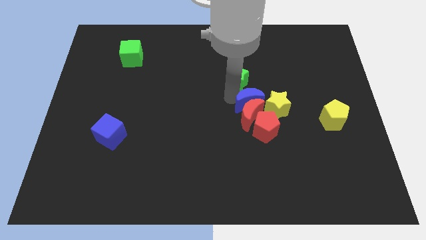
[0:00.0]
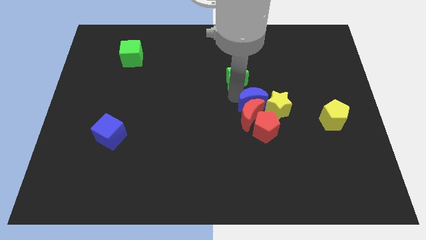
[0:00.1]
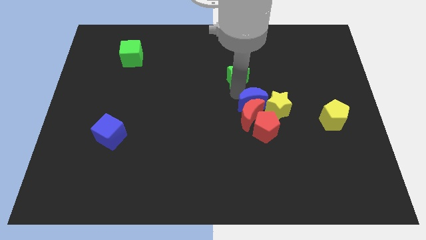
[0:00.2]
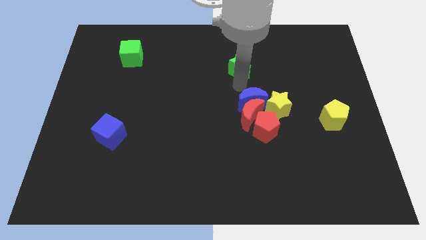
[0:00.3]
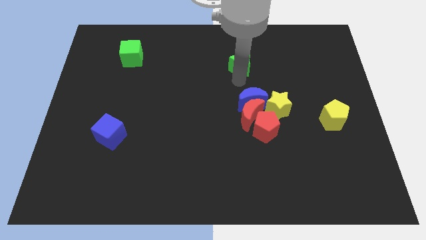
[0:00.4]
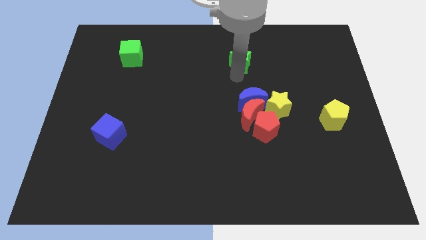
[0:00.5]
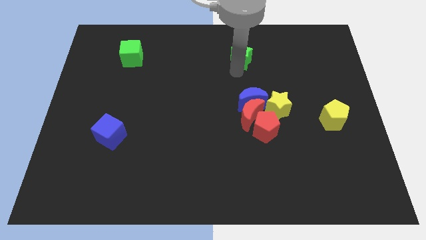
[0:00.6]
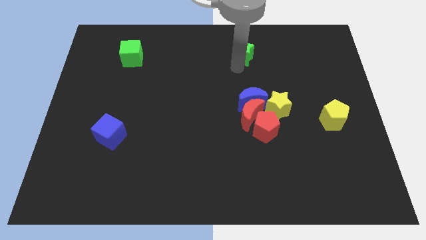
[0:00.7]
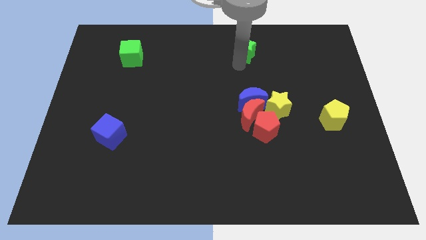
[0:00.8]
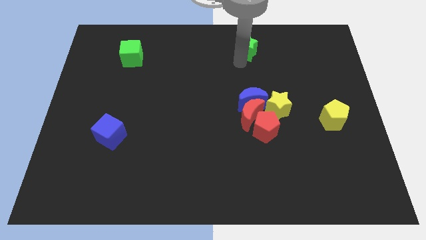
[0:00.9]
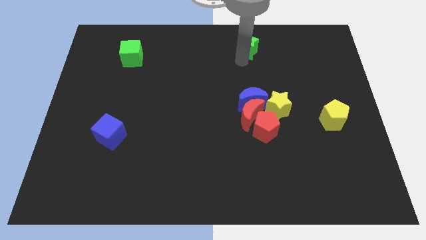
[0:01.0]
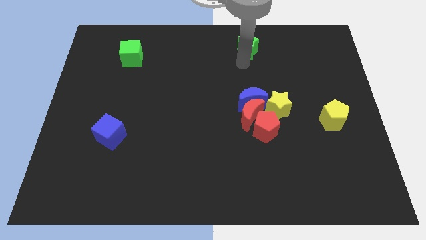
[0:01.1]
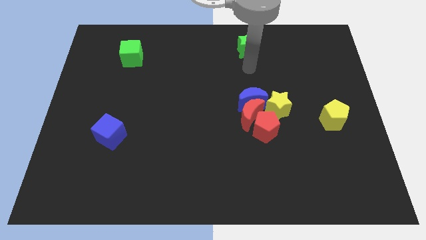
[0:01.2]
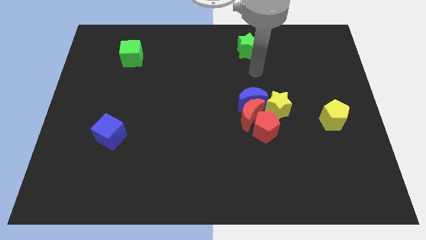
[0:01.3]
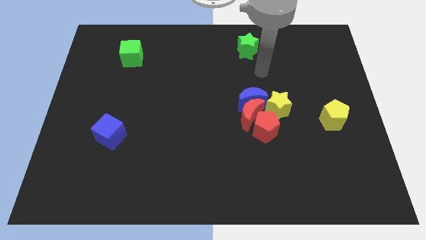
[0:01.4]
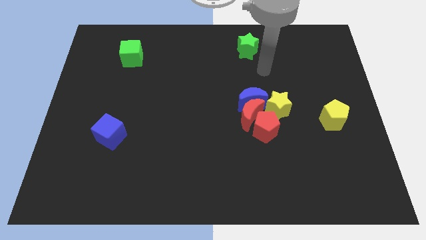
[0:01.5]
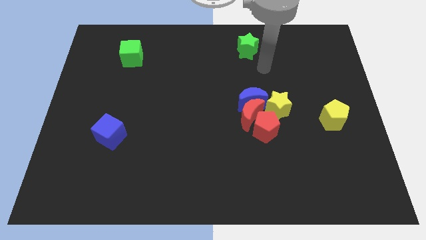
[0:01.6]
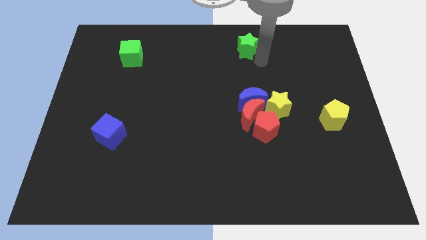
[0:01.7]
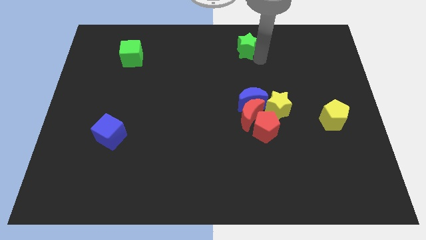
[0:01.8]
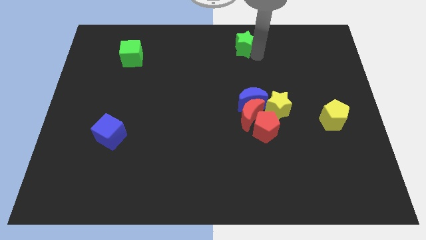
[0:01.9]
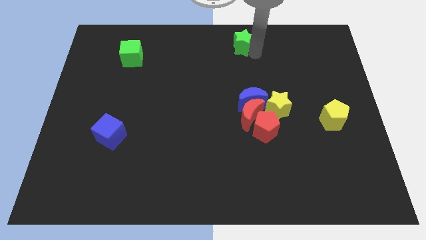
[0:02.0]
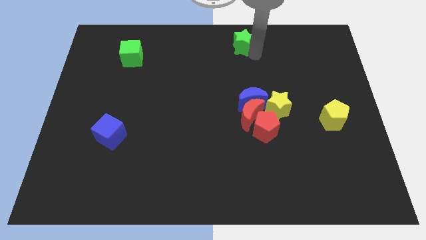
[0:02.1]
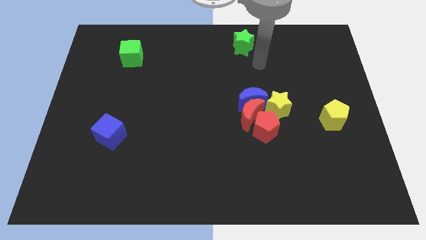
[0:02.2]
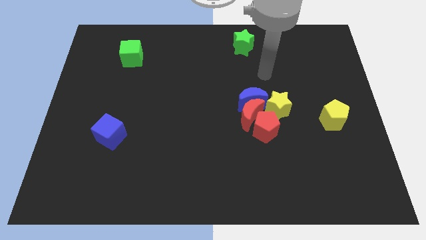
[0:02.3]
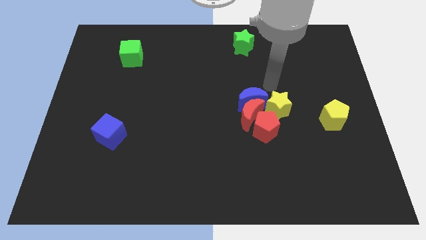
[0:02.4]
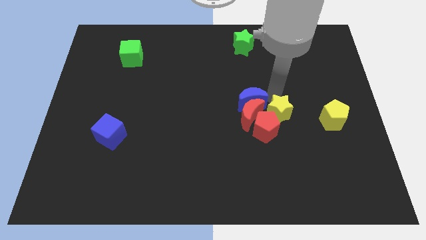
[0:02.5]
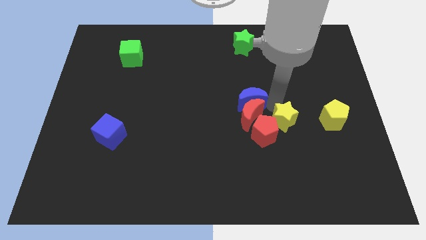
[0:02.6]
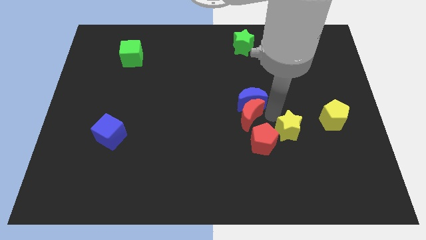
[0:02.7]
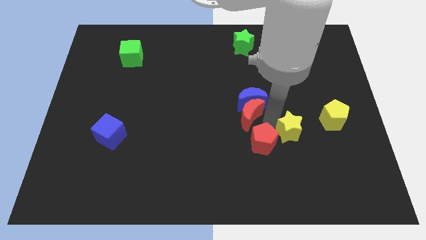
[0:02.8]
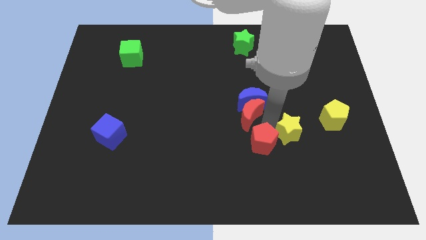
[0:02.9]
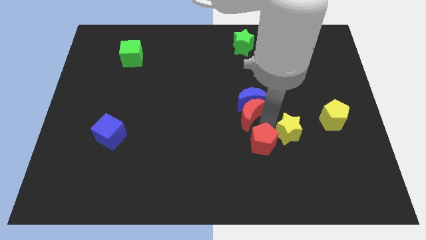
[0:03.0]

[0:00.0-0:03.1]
separate the blue moon and yellow star

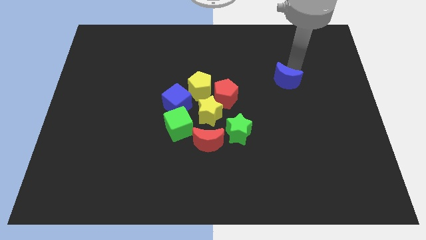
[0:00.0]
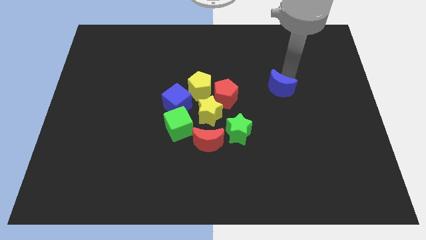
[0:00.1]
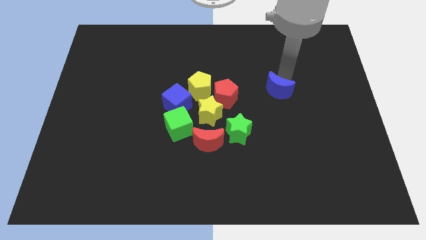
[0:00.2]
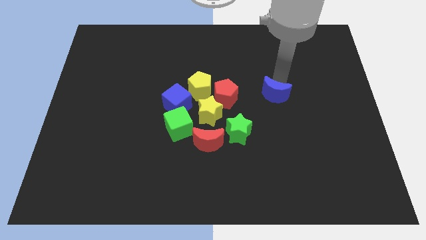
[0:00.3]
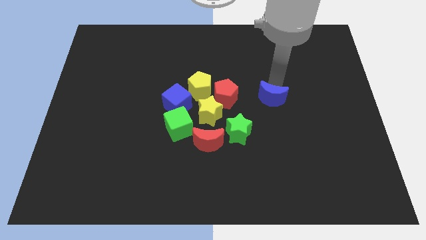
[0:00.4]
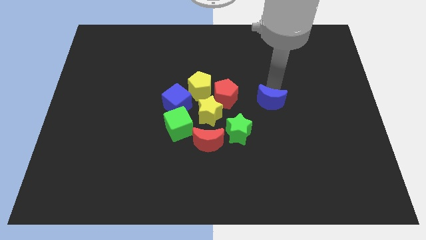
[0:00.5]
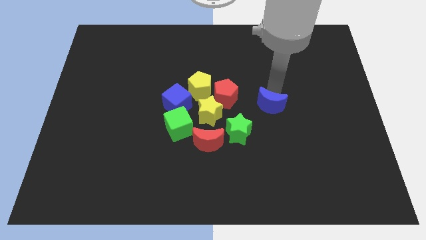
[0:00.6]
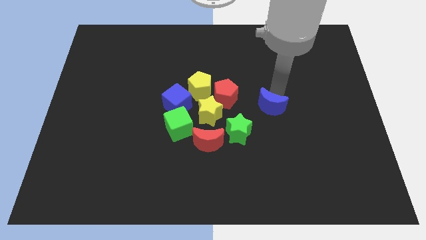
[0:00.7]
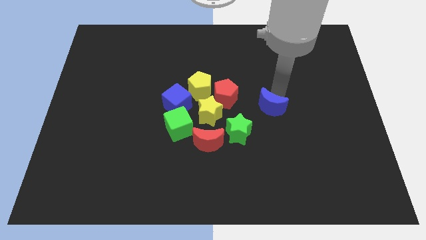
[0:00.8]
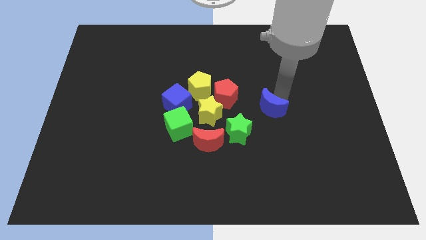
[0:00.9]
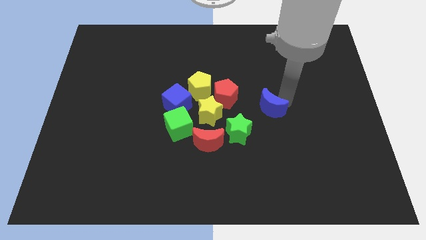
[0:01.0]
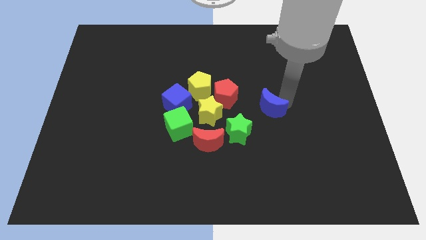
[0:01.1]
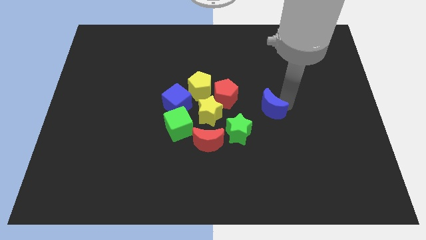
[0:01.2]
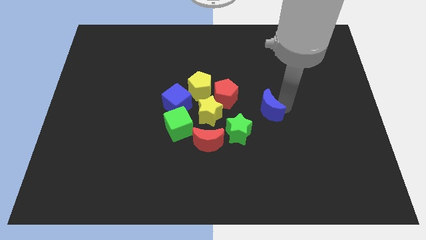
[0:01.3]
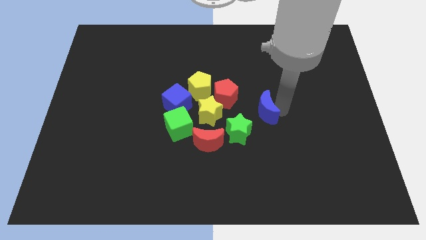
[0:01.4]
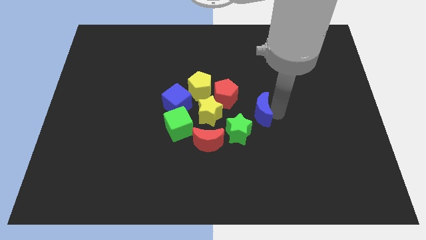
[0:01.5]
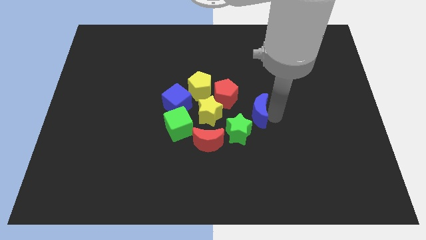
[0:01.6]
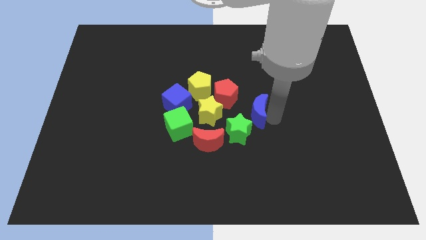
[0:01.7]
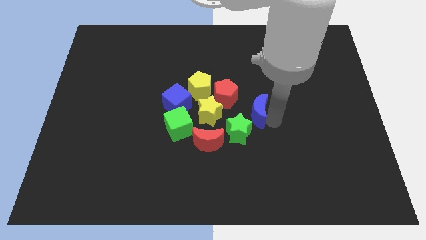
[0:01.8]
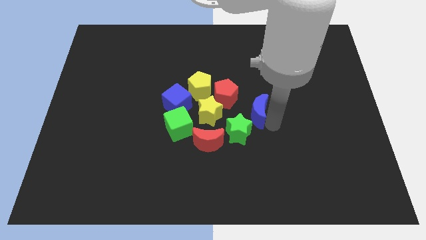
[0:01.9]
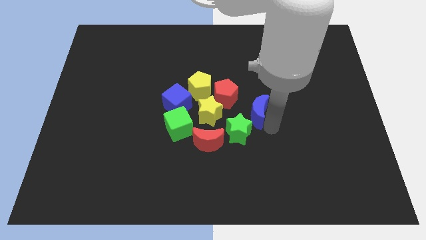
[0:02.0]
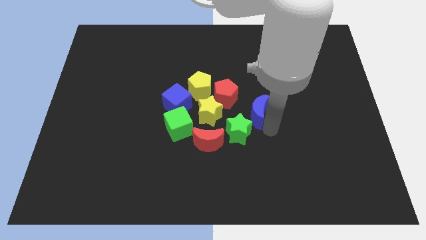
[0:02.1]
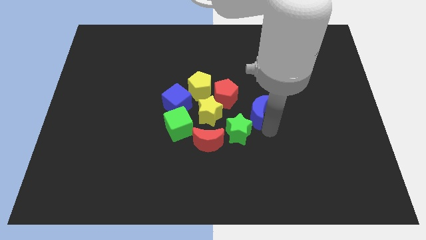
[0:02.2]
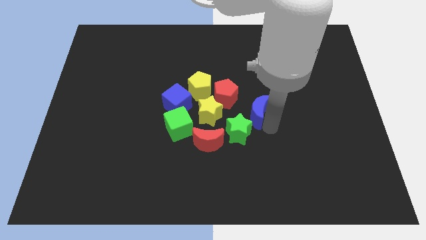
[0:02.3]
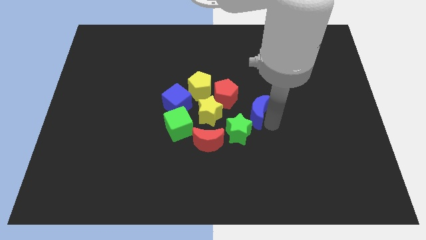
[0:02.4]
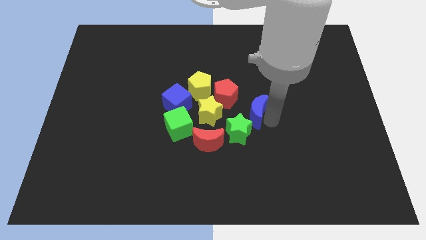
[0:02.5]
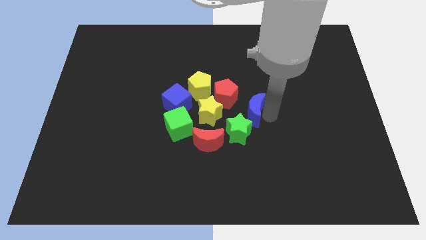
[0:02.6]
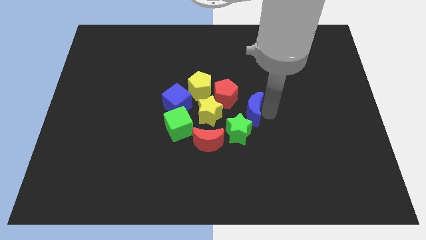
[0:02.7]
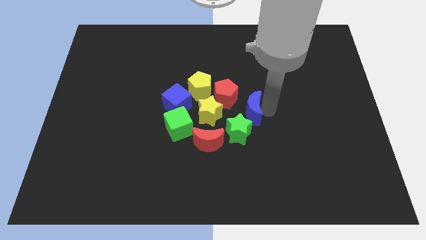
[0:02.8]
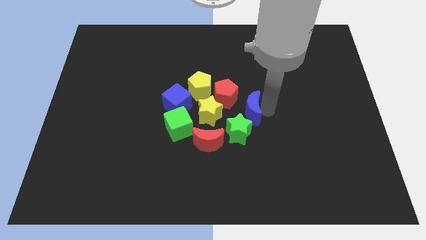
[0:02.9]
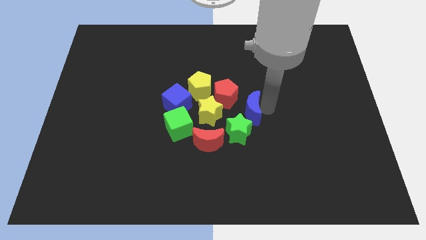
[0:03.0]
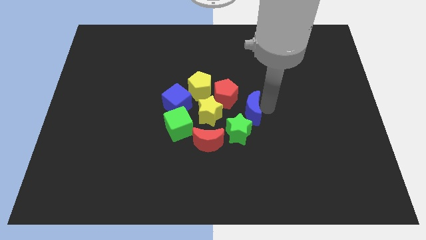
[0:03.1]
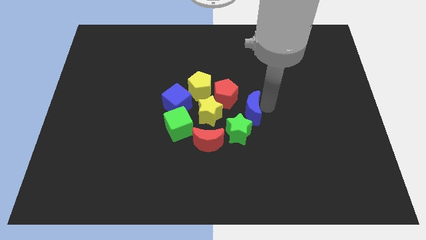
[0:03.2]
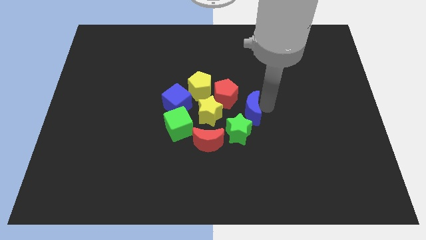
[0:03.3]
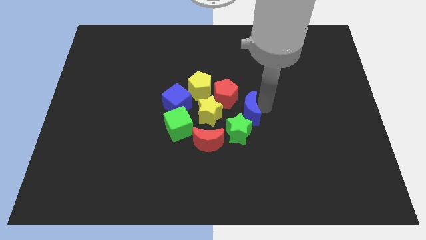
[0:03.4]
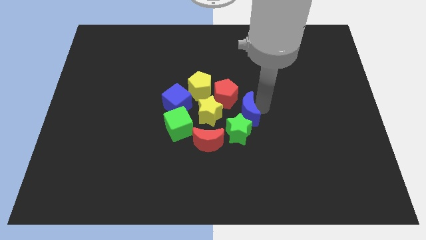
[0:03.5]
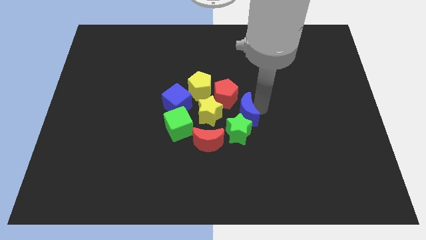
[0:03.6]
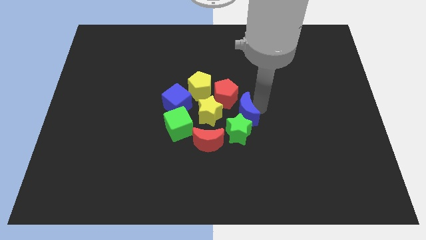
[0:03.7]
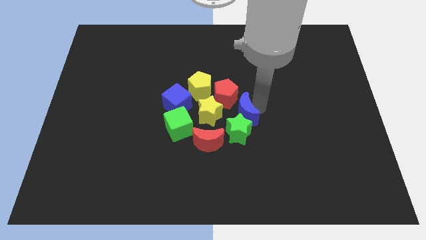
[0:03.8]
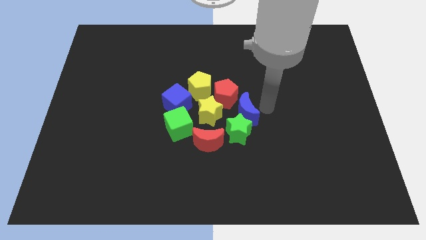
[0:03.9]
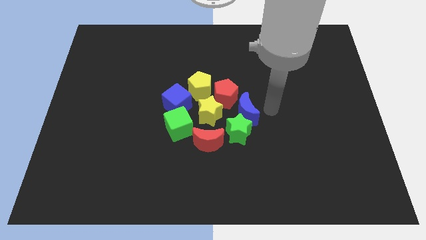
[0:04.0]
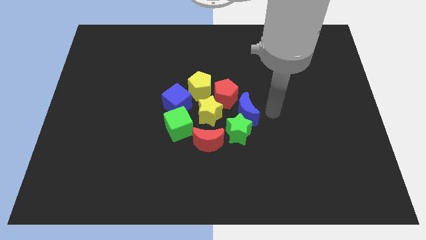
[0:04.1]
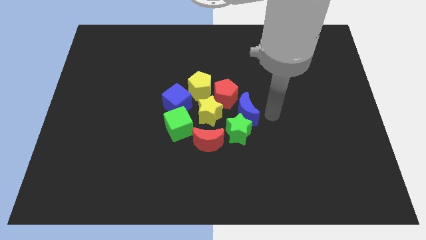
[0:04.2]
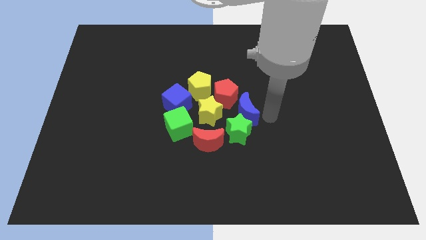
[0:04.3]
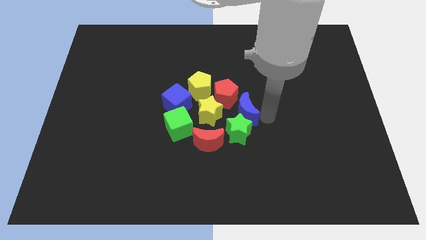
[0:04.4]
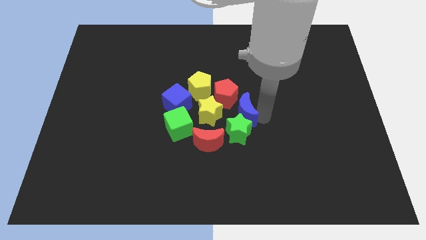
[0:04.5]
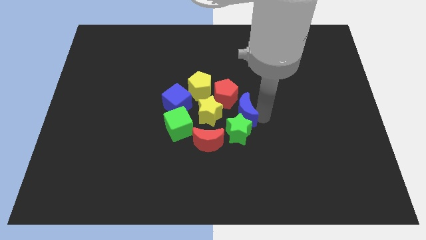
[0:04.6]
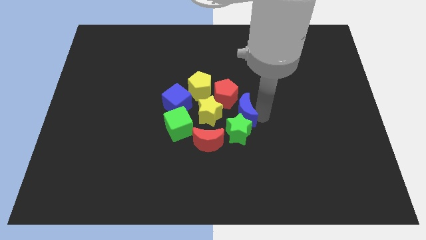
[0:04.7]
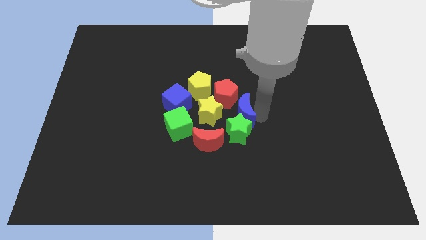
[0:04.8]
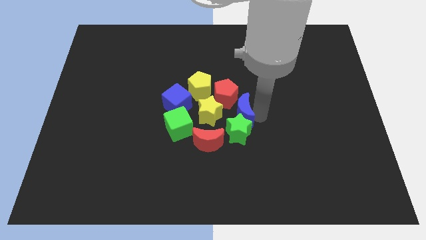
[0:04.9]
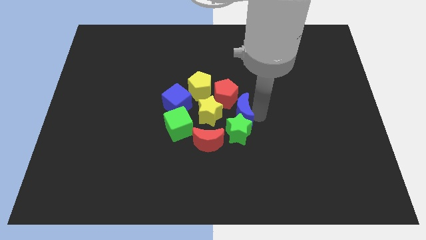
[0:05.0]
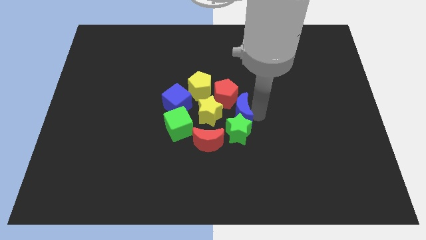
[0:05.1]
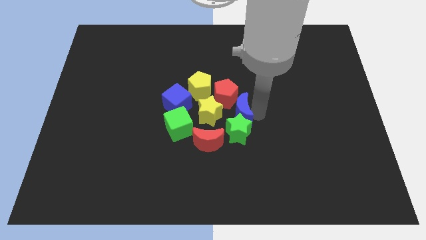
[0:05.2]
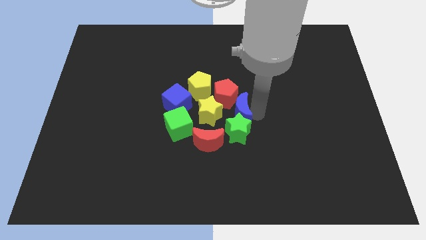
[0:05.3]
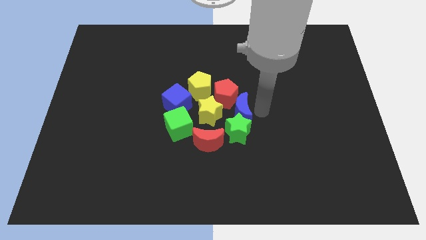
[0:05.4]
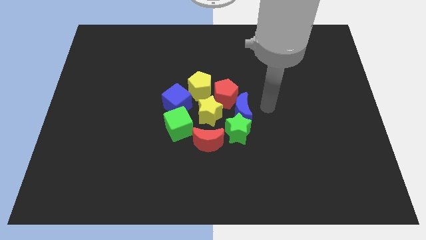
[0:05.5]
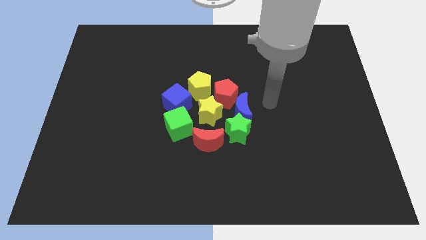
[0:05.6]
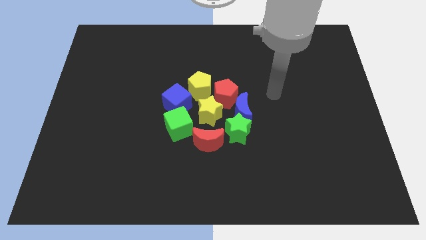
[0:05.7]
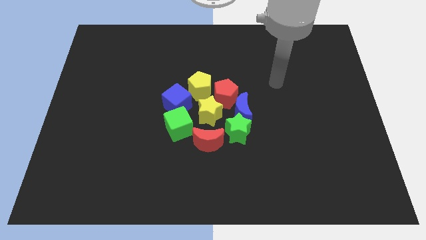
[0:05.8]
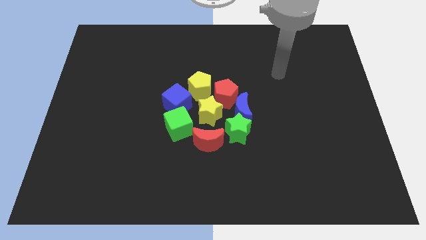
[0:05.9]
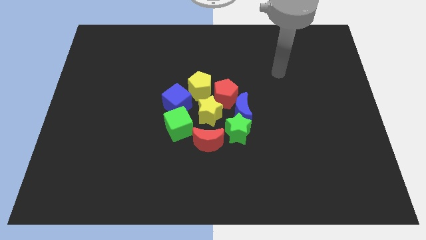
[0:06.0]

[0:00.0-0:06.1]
move the blue crescent to the top of the green star
